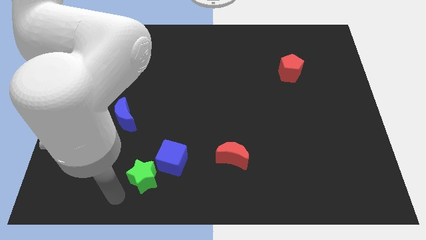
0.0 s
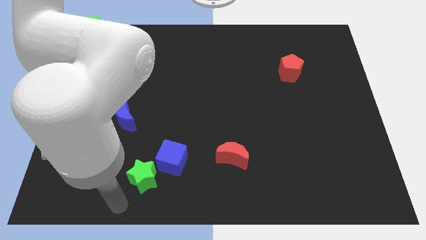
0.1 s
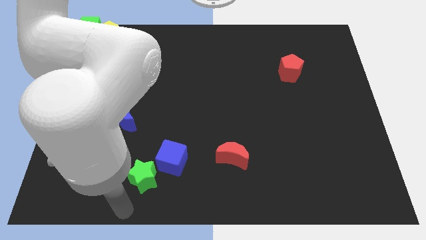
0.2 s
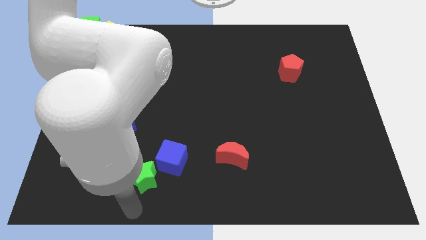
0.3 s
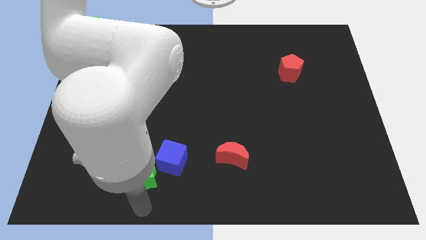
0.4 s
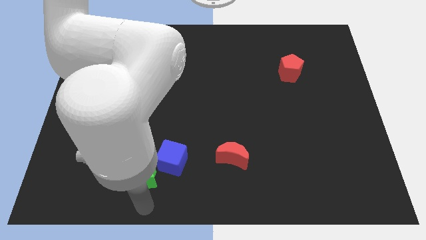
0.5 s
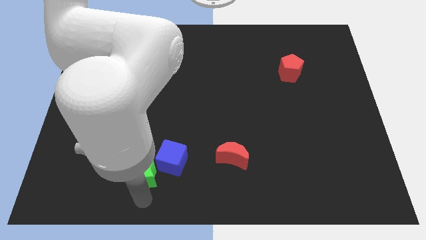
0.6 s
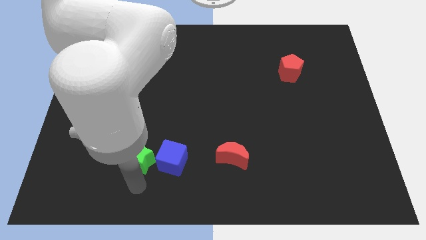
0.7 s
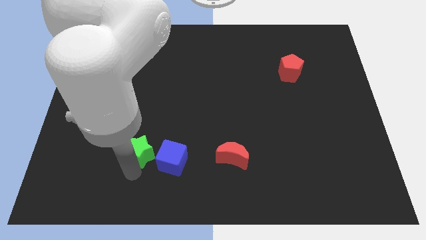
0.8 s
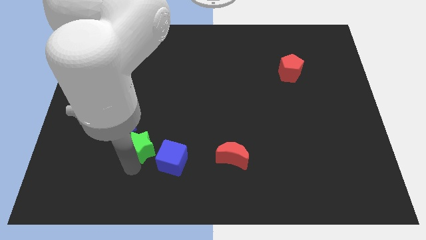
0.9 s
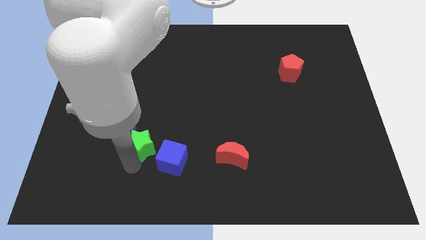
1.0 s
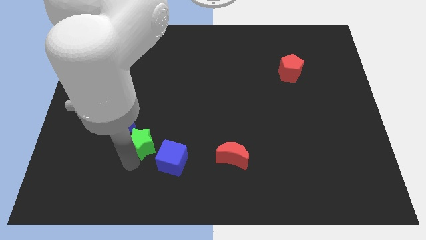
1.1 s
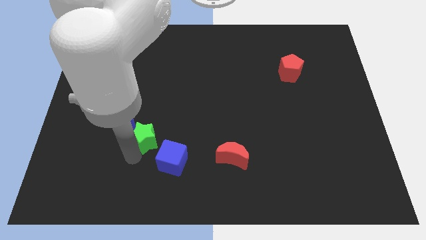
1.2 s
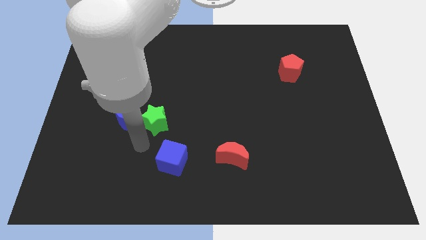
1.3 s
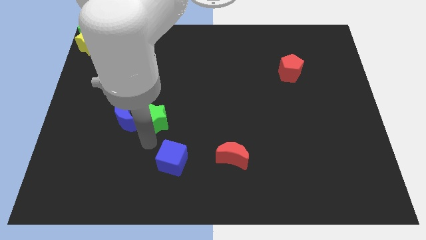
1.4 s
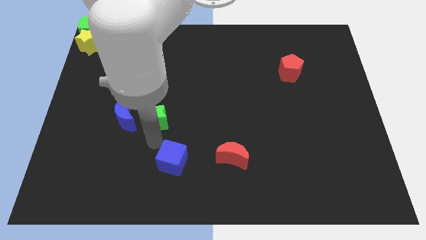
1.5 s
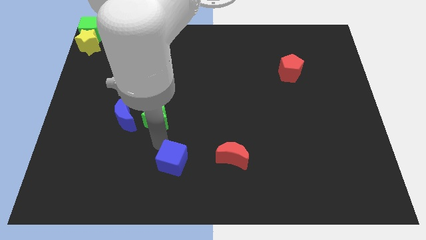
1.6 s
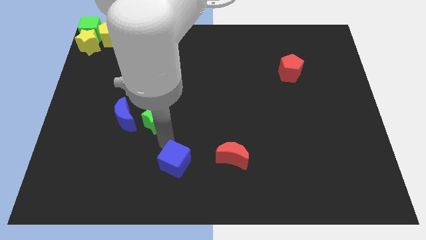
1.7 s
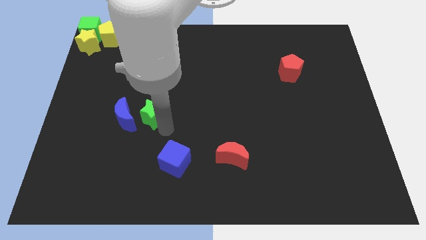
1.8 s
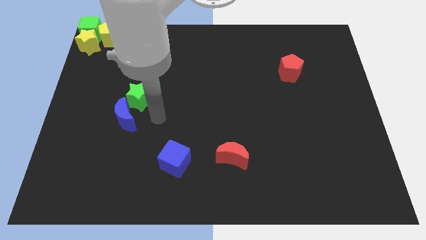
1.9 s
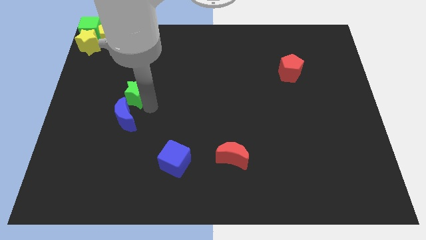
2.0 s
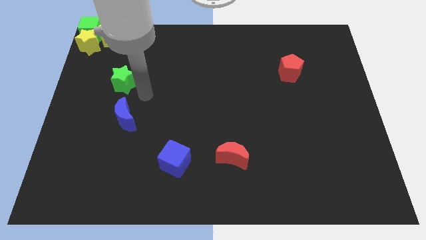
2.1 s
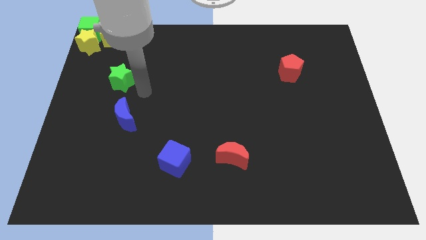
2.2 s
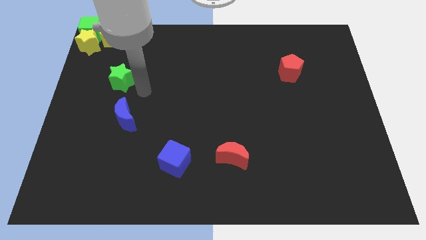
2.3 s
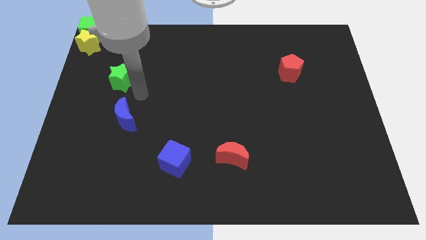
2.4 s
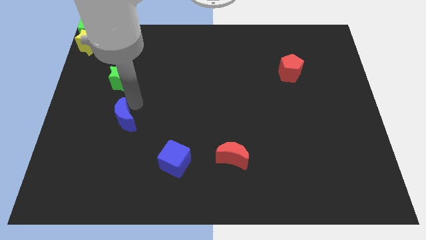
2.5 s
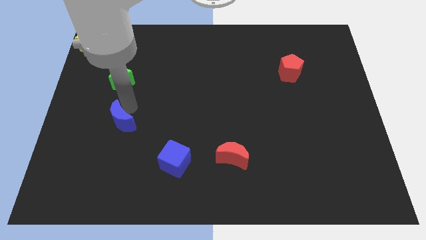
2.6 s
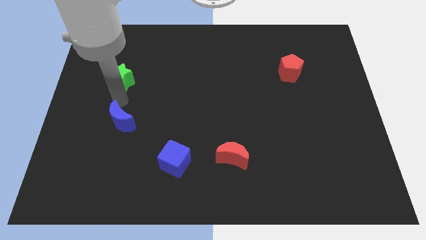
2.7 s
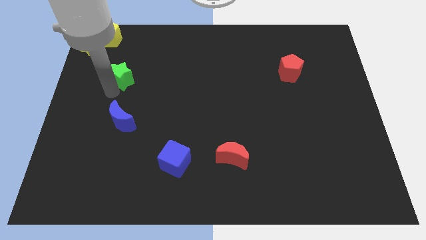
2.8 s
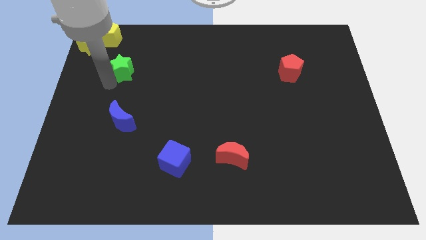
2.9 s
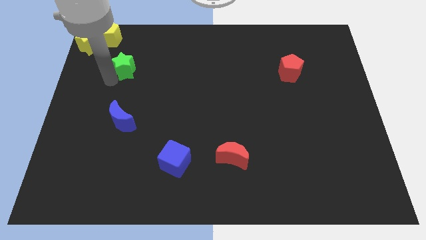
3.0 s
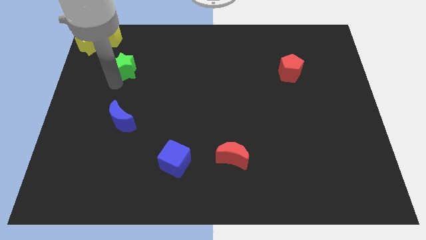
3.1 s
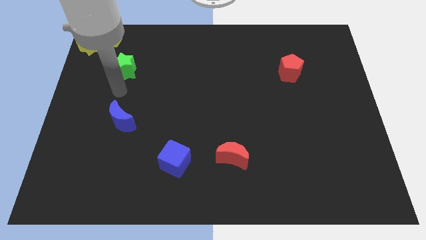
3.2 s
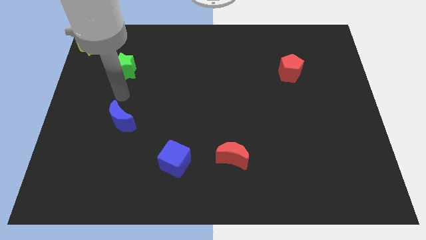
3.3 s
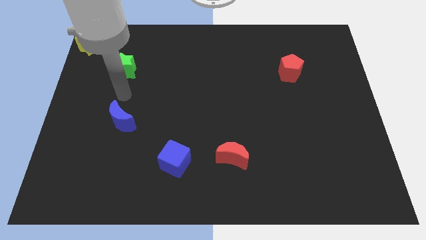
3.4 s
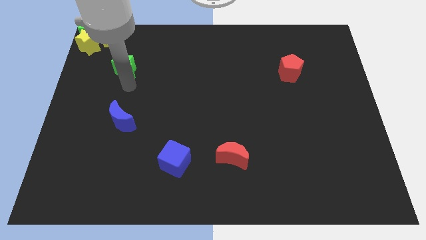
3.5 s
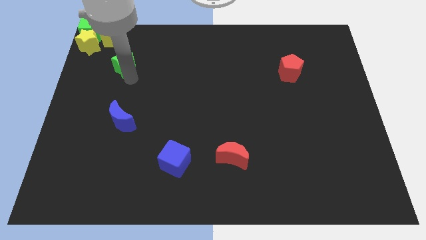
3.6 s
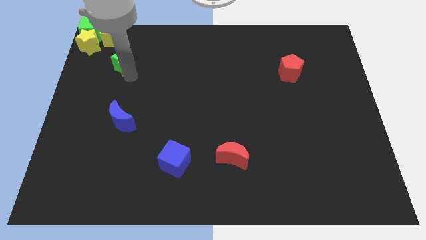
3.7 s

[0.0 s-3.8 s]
slide the green star vertically above the blue moon

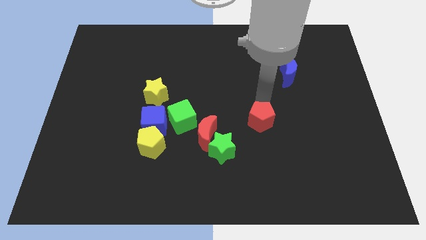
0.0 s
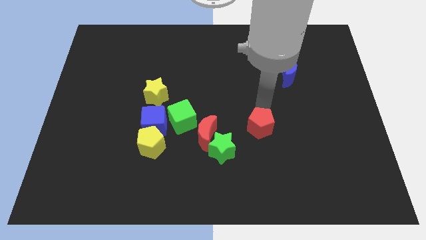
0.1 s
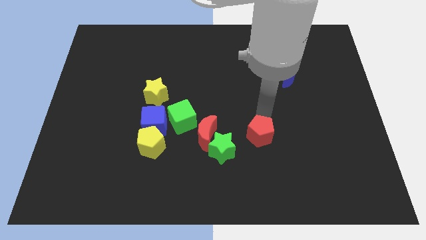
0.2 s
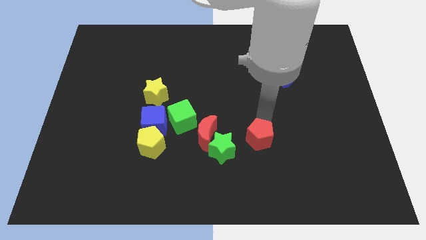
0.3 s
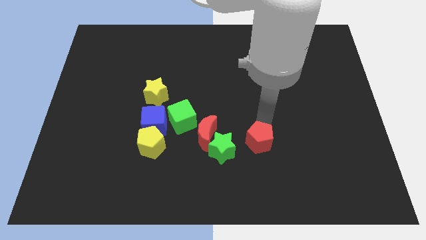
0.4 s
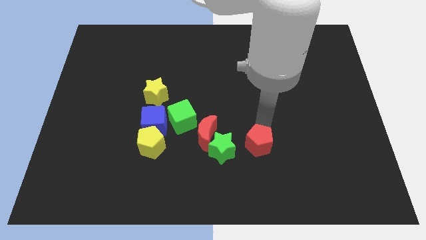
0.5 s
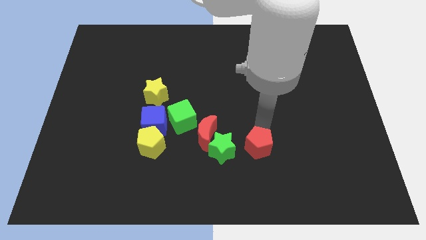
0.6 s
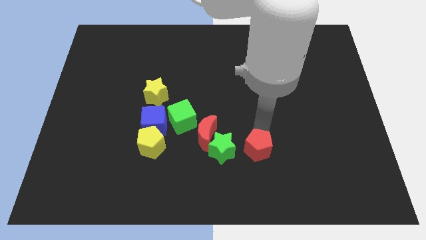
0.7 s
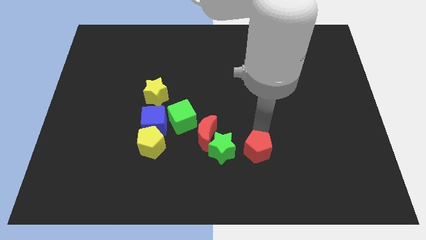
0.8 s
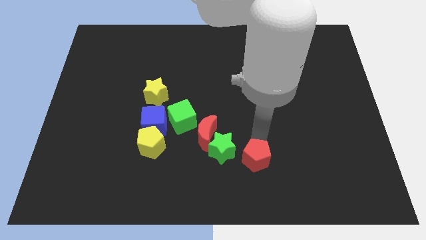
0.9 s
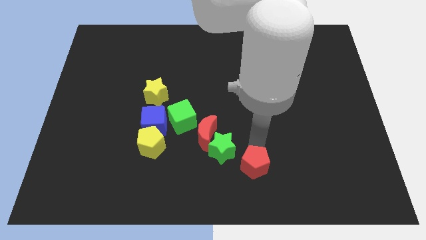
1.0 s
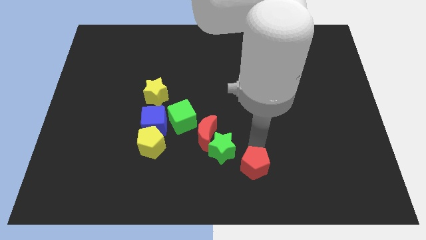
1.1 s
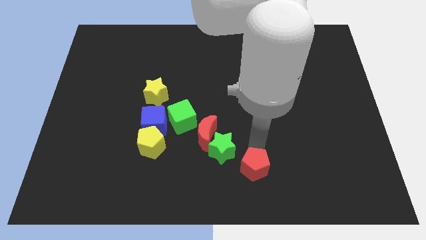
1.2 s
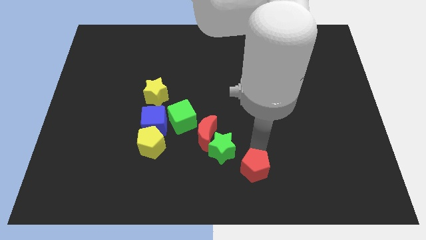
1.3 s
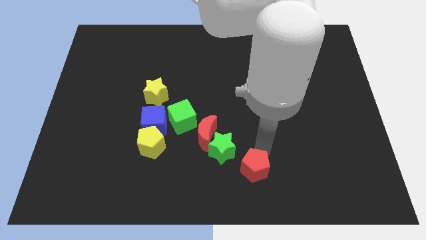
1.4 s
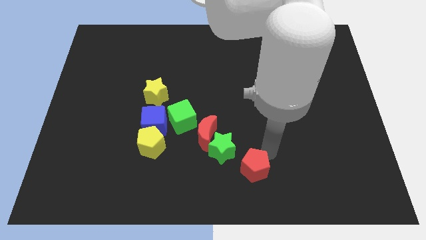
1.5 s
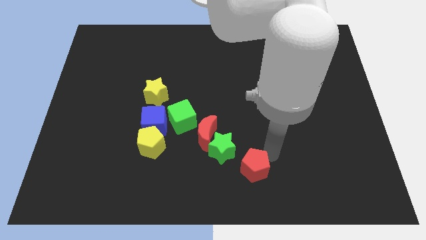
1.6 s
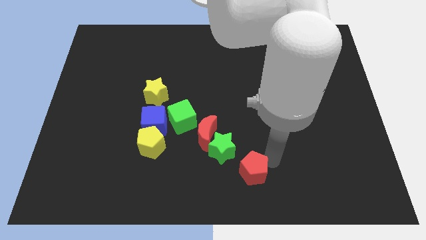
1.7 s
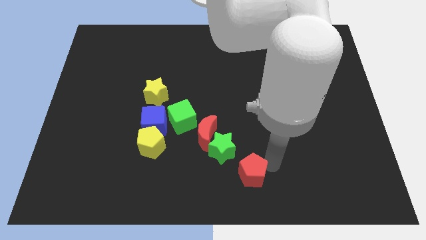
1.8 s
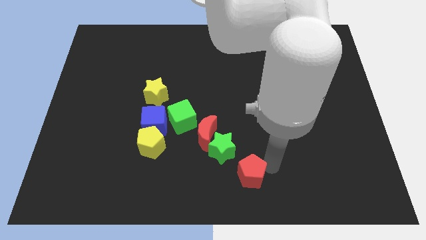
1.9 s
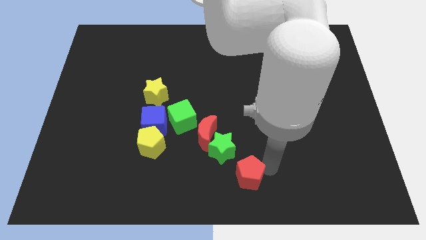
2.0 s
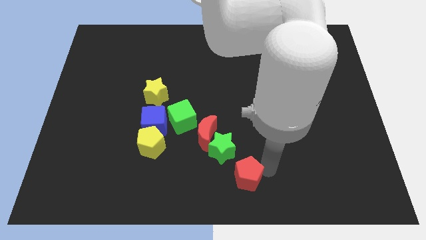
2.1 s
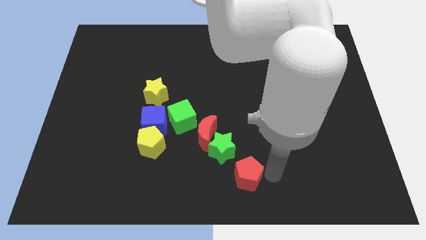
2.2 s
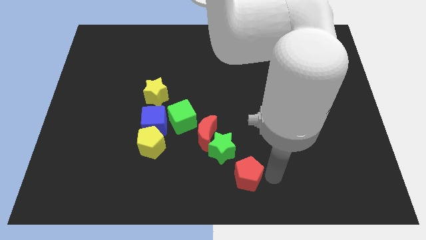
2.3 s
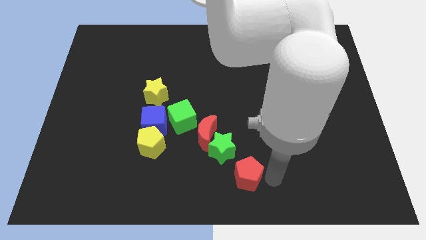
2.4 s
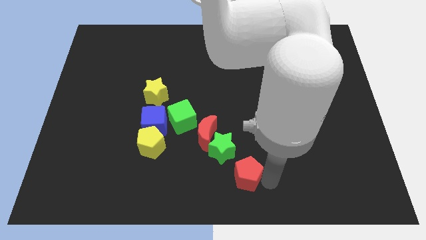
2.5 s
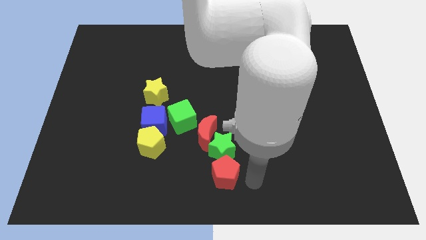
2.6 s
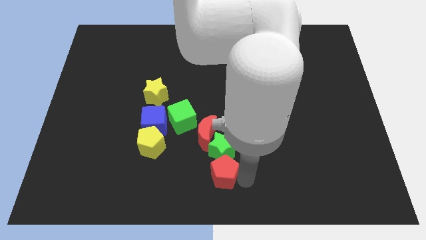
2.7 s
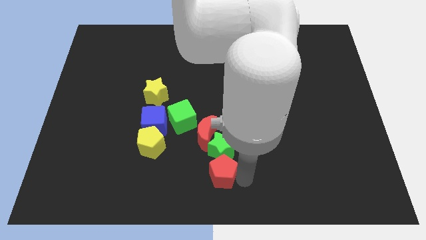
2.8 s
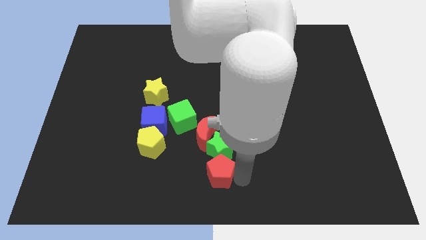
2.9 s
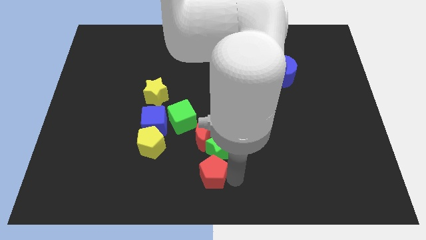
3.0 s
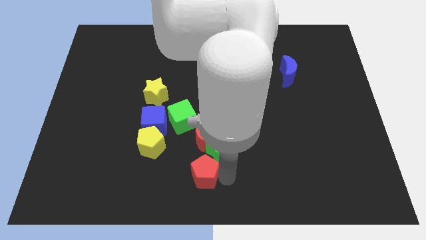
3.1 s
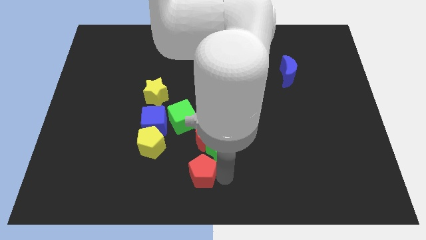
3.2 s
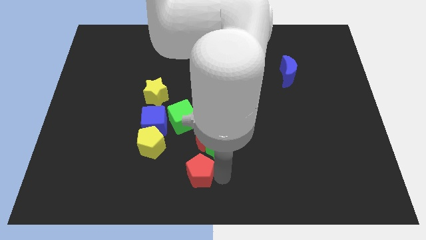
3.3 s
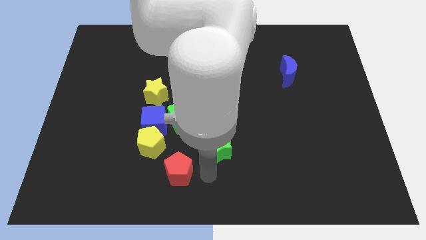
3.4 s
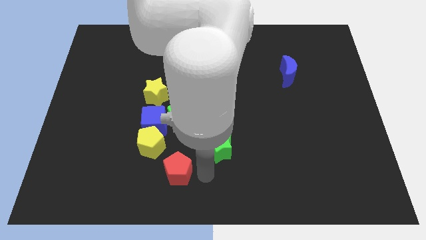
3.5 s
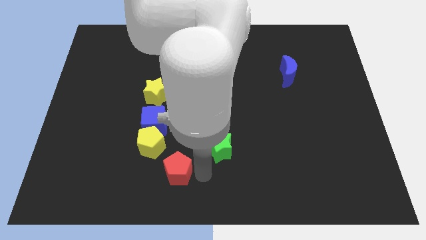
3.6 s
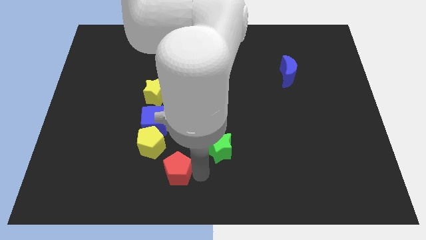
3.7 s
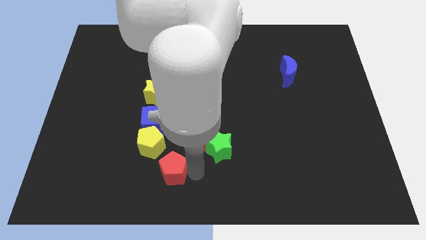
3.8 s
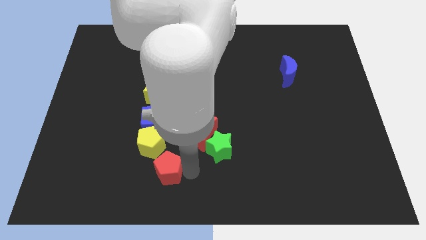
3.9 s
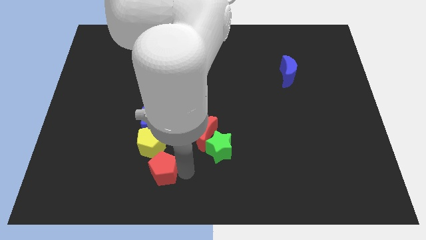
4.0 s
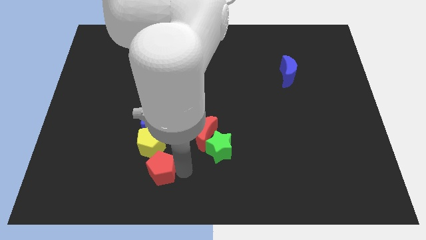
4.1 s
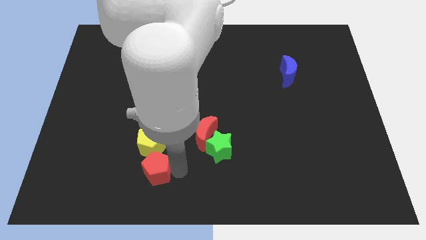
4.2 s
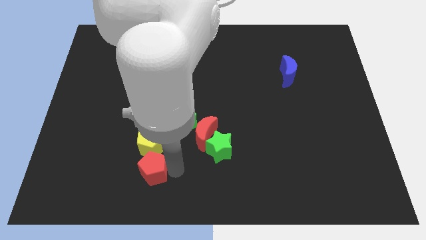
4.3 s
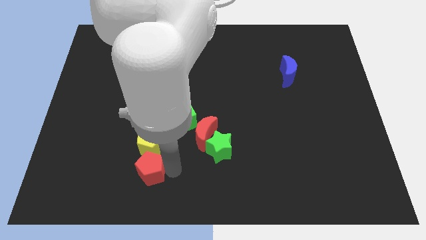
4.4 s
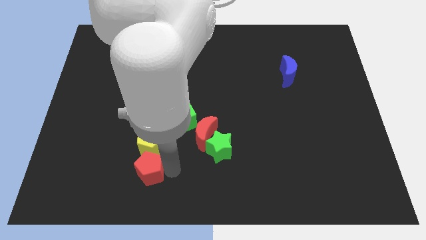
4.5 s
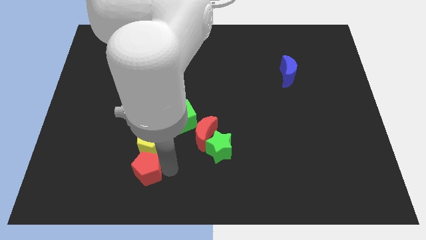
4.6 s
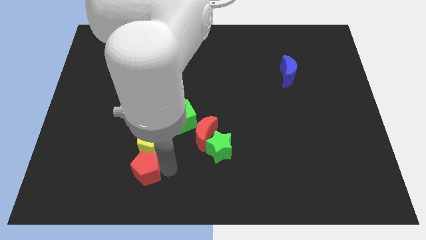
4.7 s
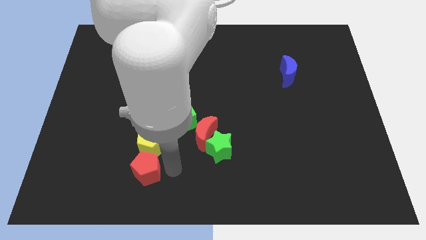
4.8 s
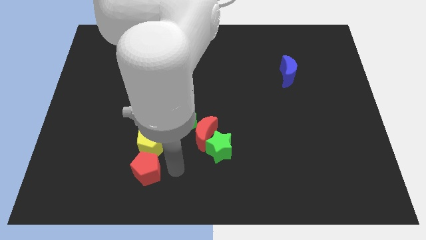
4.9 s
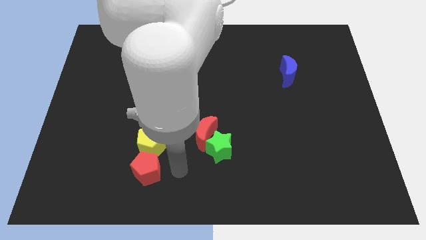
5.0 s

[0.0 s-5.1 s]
slide red pentagon below yellow pentagon
